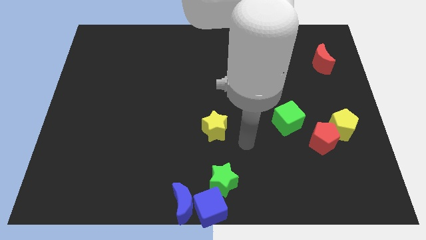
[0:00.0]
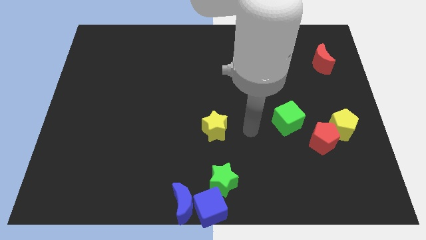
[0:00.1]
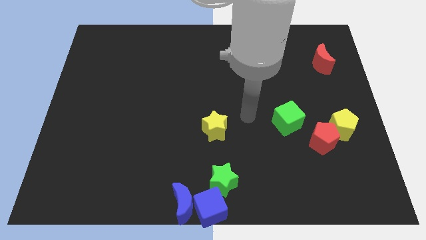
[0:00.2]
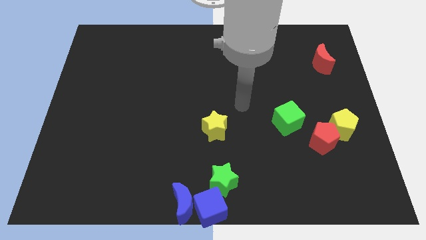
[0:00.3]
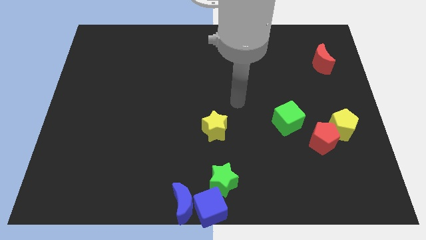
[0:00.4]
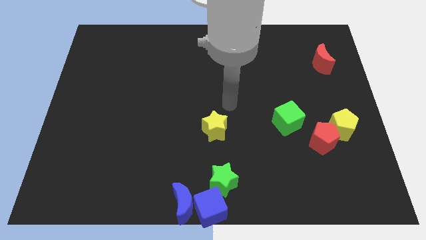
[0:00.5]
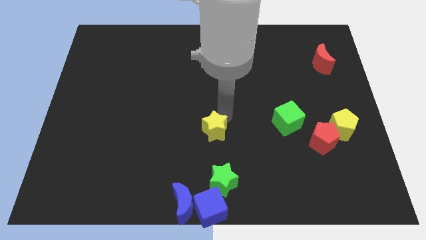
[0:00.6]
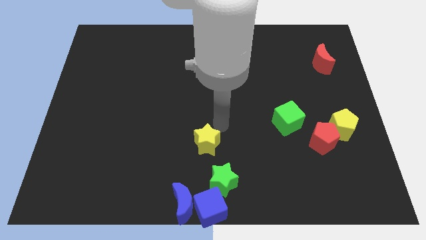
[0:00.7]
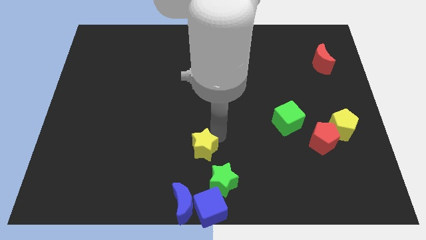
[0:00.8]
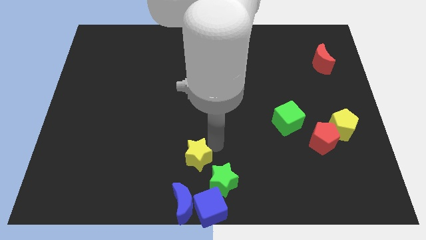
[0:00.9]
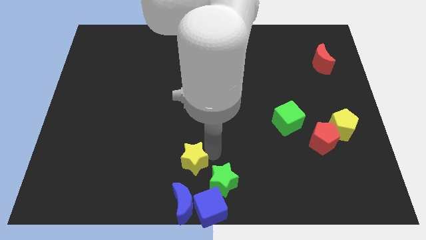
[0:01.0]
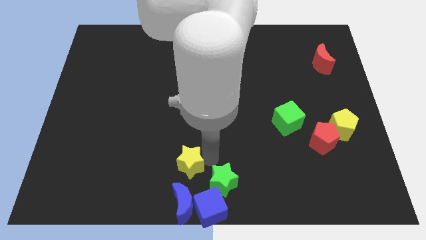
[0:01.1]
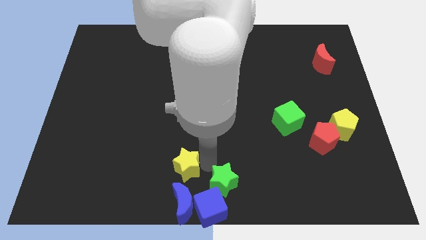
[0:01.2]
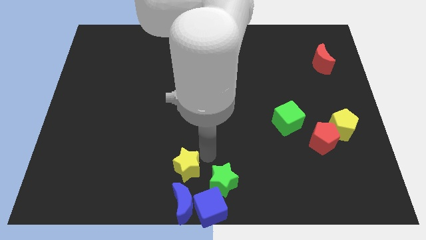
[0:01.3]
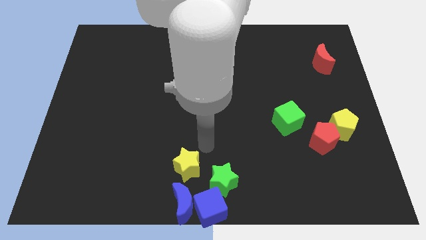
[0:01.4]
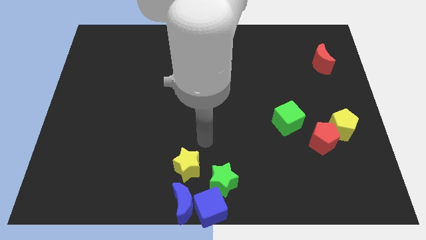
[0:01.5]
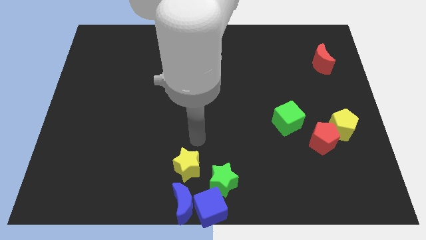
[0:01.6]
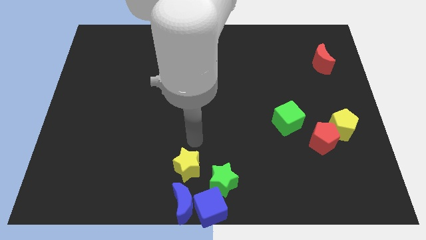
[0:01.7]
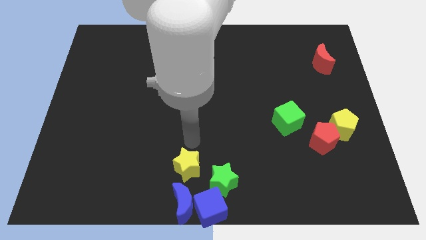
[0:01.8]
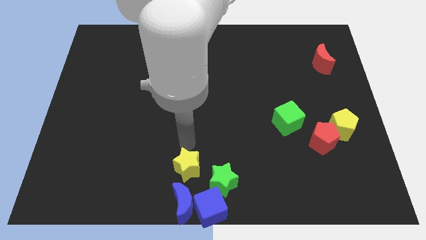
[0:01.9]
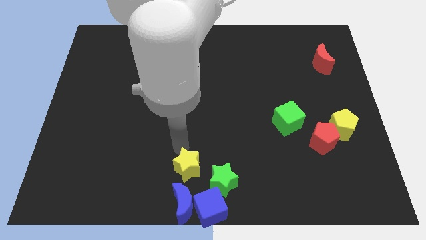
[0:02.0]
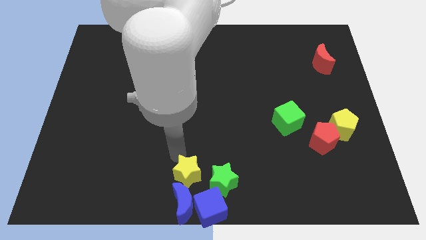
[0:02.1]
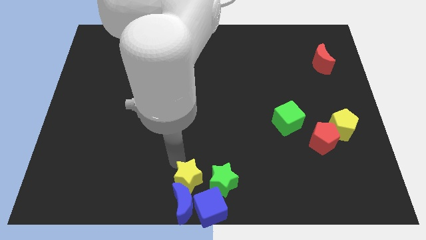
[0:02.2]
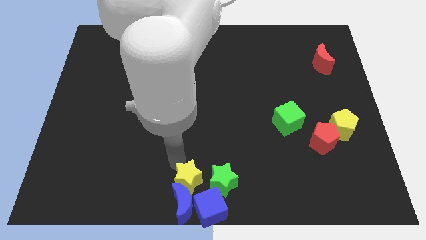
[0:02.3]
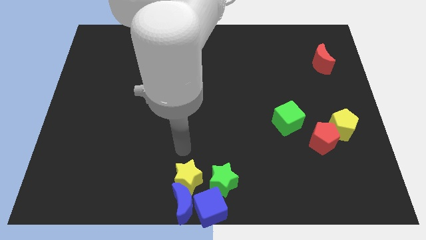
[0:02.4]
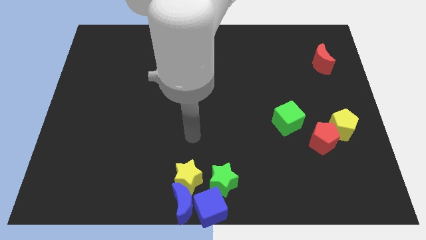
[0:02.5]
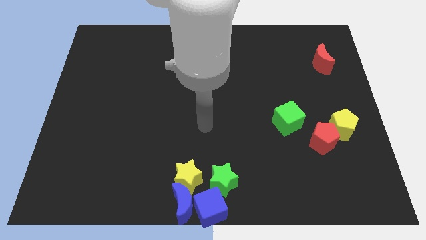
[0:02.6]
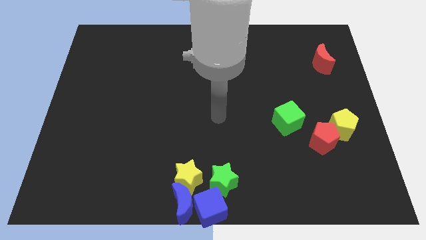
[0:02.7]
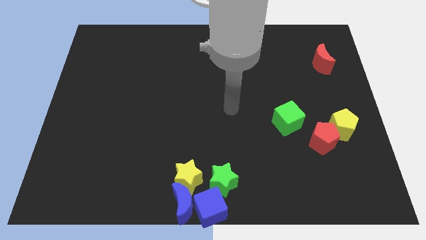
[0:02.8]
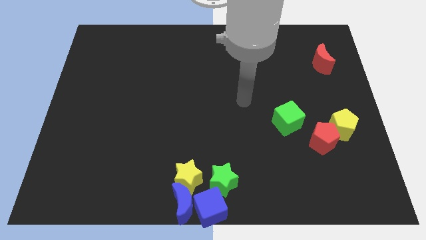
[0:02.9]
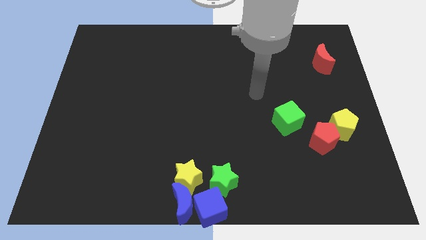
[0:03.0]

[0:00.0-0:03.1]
place the yellow star above the blue crescent

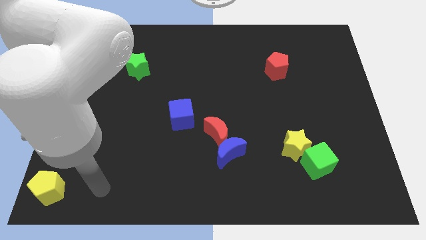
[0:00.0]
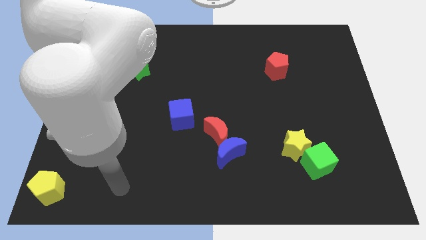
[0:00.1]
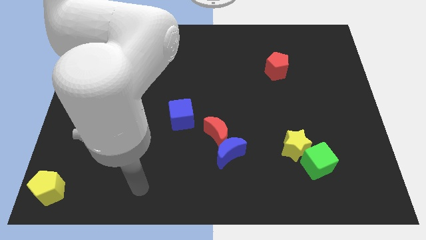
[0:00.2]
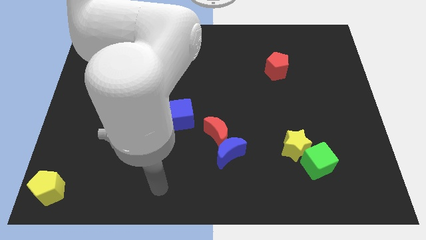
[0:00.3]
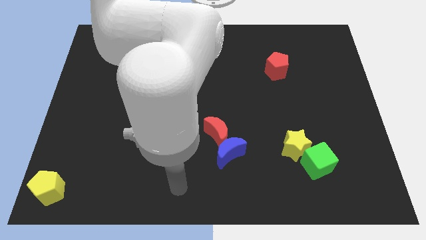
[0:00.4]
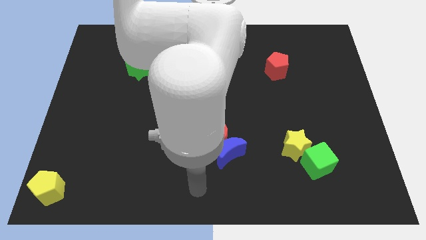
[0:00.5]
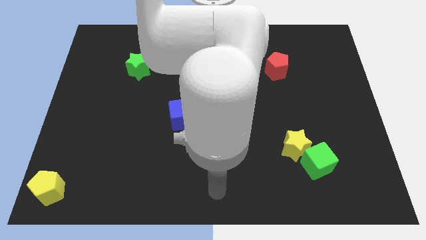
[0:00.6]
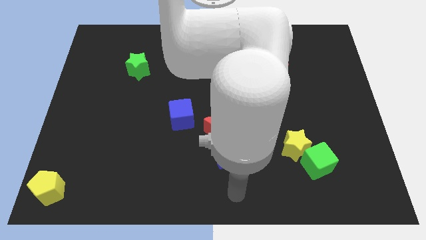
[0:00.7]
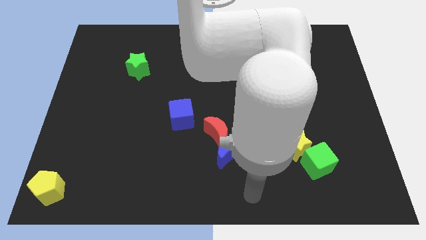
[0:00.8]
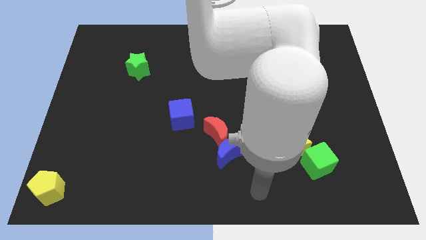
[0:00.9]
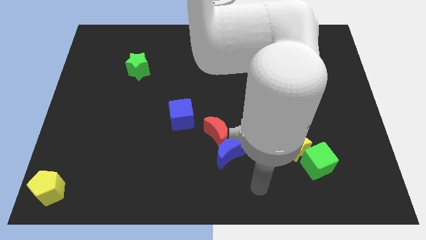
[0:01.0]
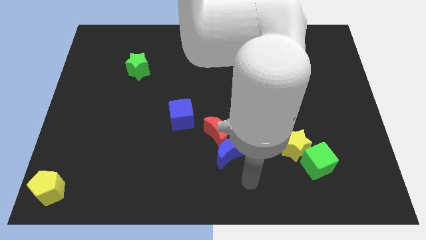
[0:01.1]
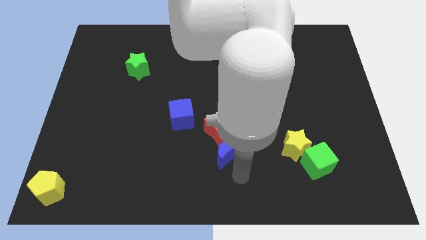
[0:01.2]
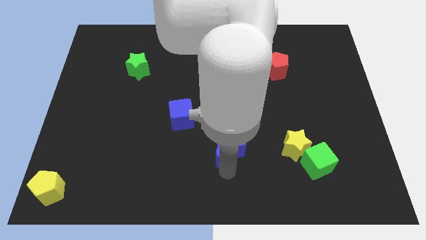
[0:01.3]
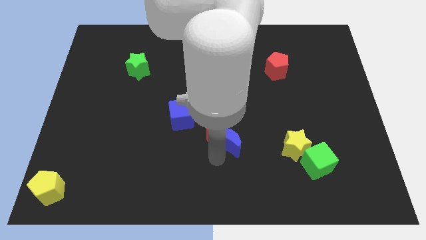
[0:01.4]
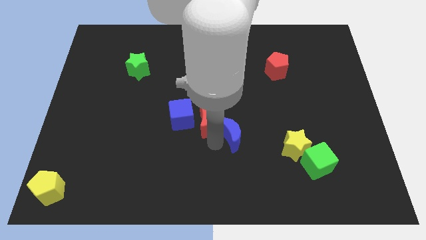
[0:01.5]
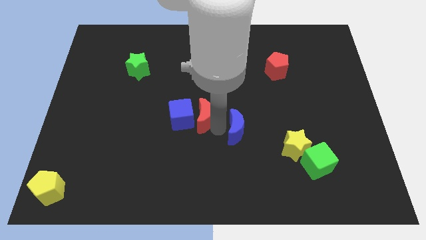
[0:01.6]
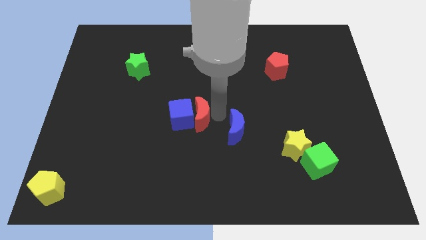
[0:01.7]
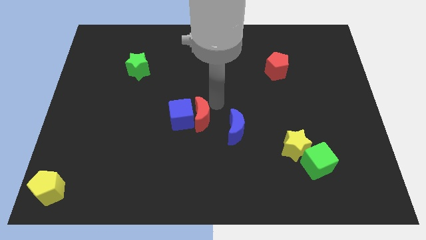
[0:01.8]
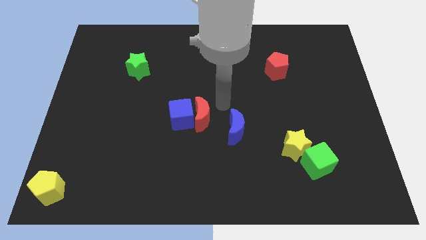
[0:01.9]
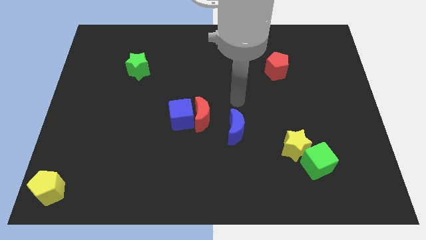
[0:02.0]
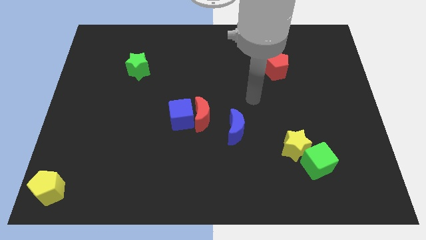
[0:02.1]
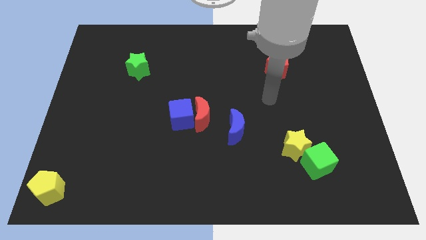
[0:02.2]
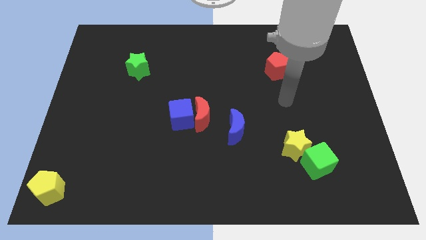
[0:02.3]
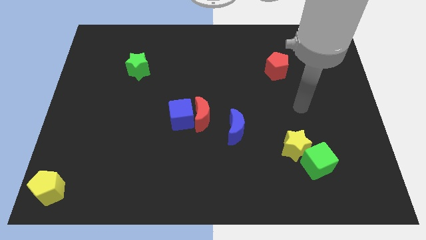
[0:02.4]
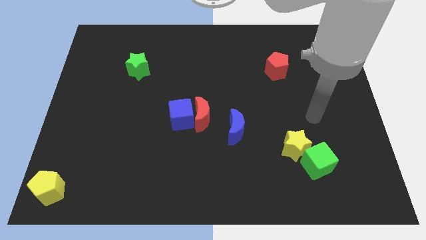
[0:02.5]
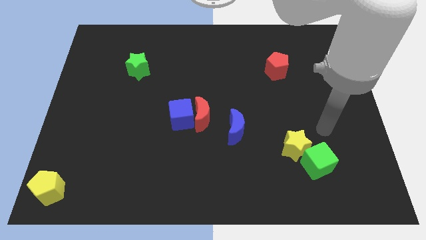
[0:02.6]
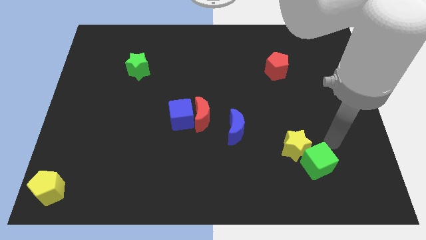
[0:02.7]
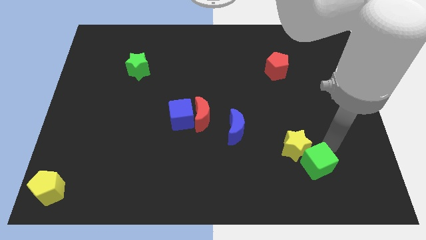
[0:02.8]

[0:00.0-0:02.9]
separate the crescents

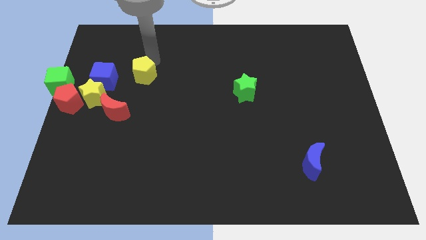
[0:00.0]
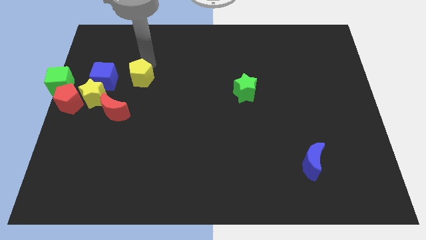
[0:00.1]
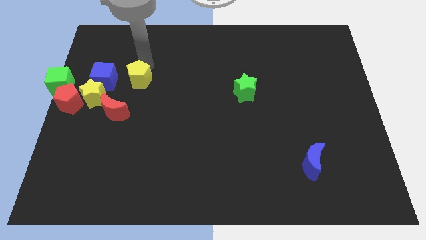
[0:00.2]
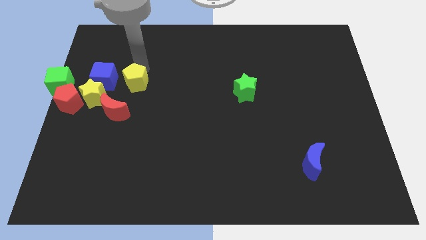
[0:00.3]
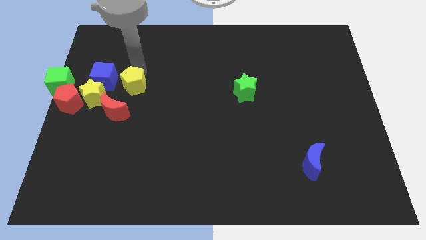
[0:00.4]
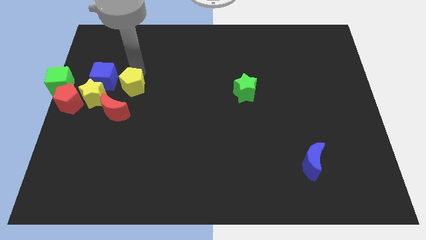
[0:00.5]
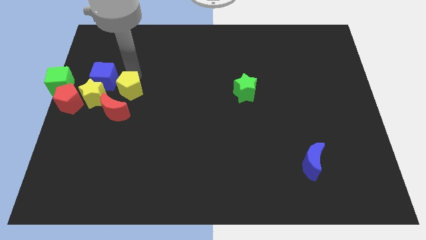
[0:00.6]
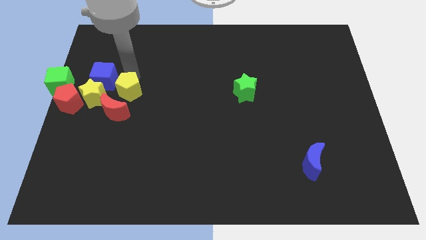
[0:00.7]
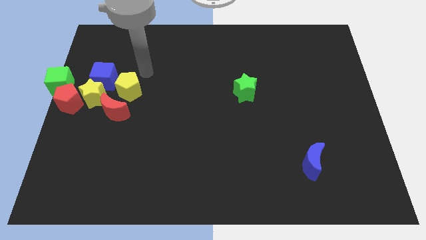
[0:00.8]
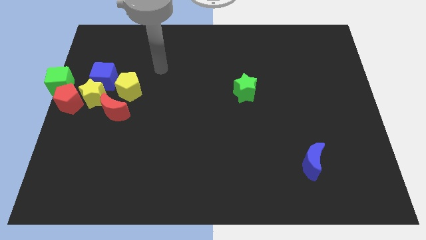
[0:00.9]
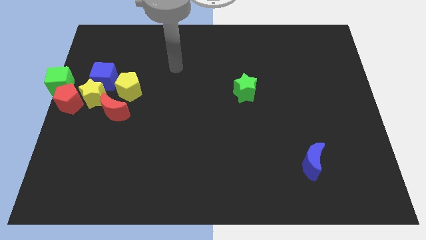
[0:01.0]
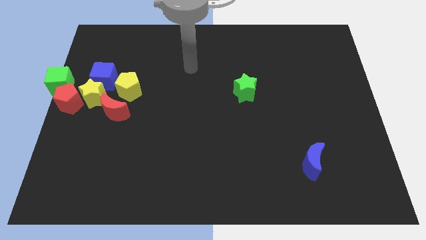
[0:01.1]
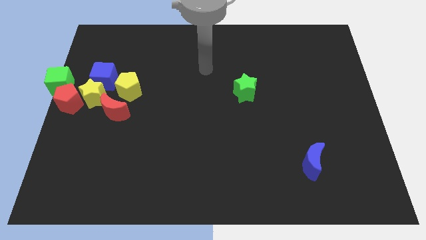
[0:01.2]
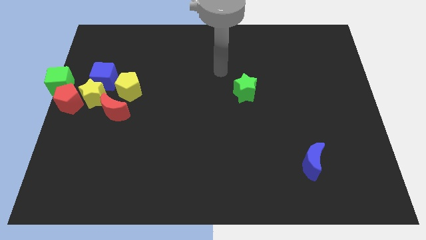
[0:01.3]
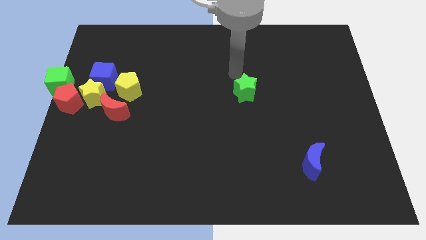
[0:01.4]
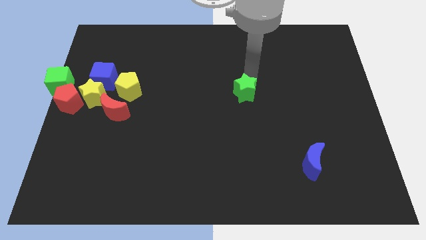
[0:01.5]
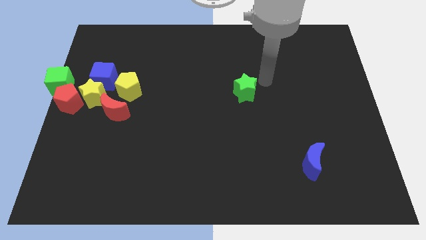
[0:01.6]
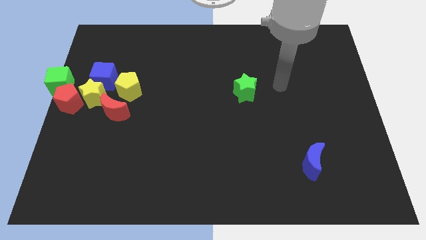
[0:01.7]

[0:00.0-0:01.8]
place yellow pentagon to the right of blue cube

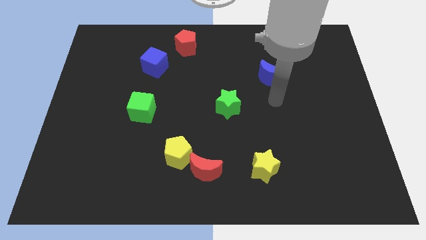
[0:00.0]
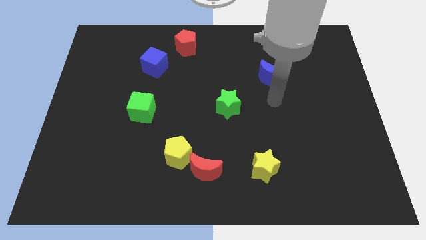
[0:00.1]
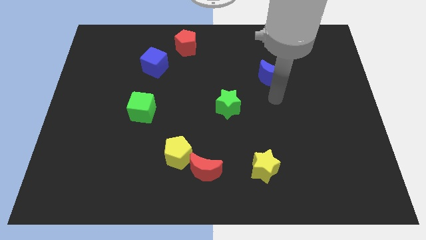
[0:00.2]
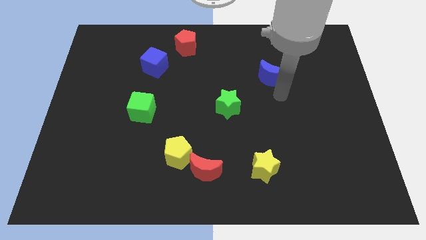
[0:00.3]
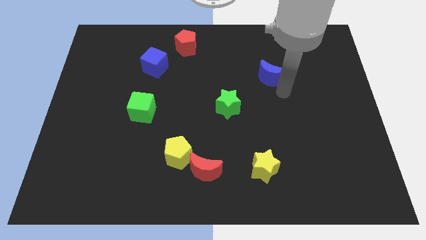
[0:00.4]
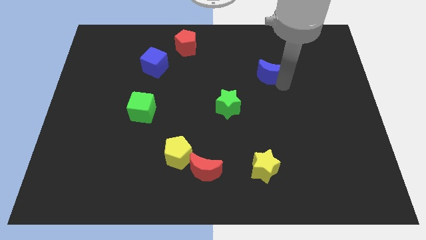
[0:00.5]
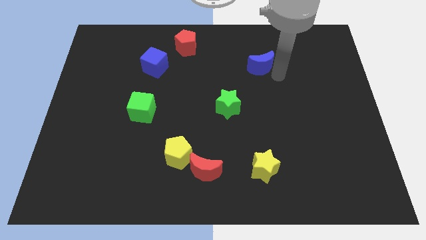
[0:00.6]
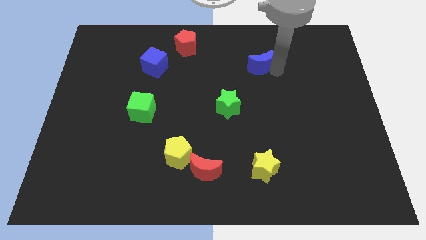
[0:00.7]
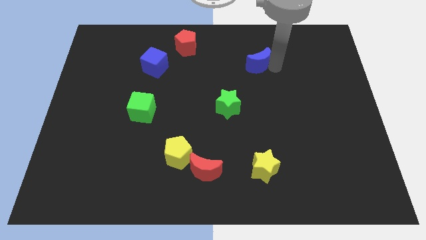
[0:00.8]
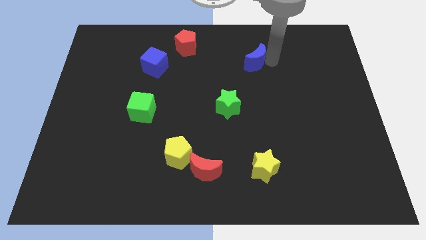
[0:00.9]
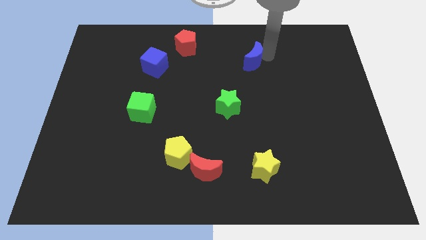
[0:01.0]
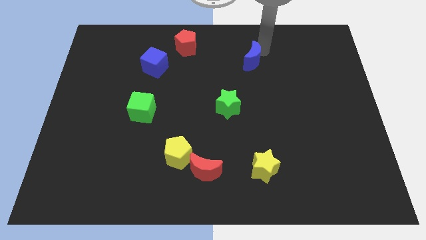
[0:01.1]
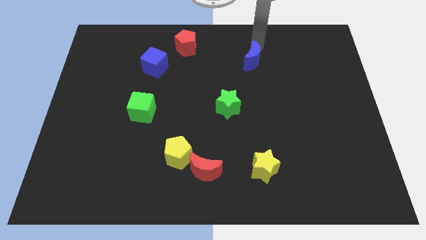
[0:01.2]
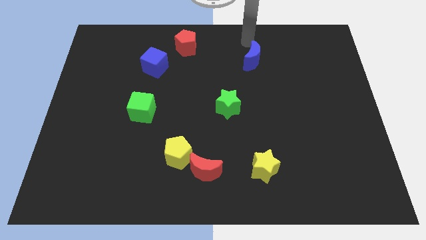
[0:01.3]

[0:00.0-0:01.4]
place blue crescent slightly upwards
